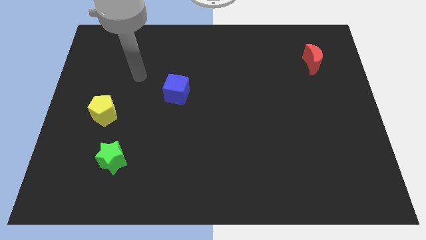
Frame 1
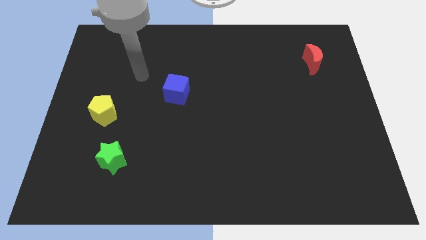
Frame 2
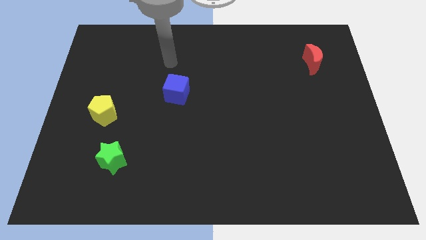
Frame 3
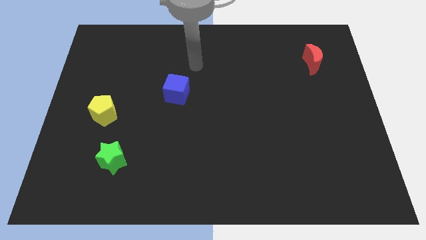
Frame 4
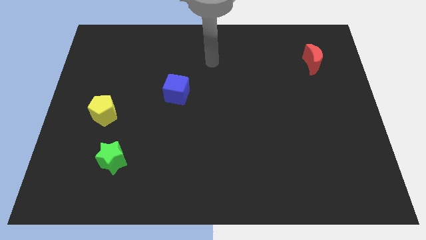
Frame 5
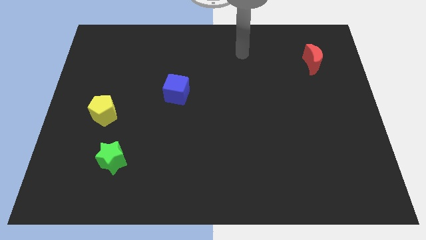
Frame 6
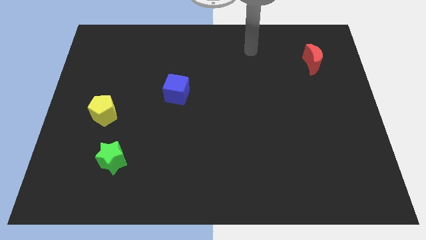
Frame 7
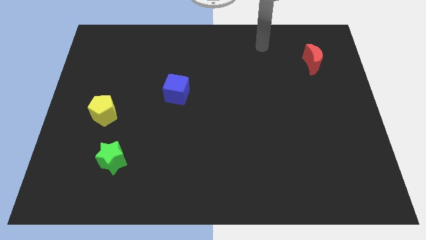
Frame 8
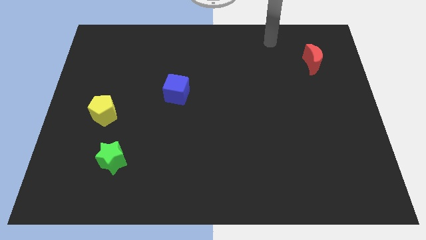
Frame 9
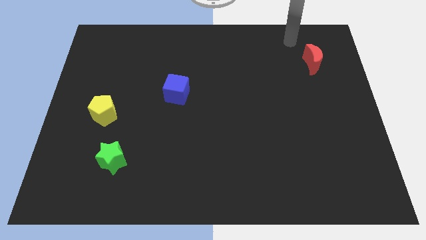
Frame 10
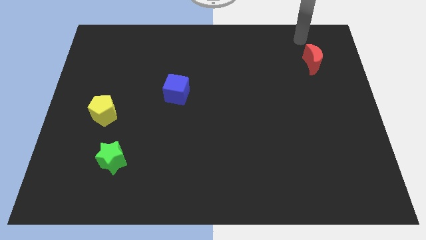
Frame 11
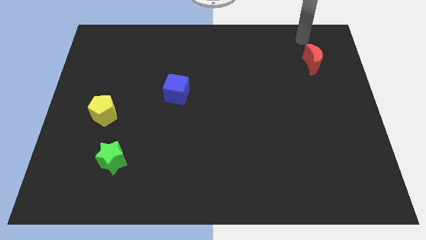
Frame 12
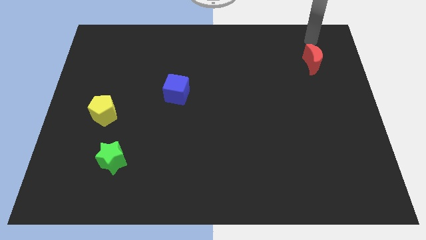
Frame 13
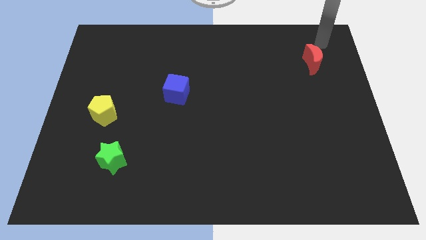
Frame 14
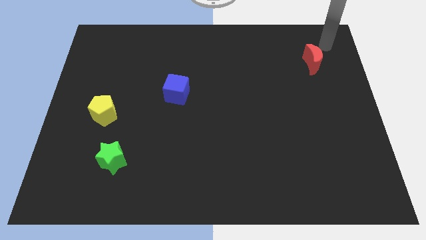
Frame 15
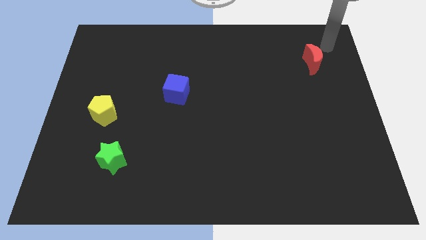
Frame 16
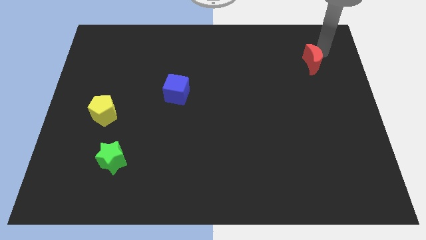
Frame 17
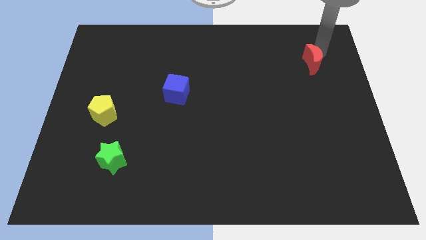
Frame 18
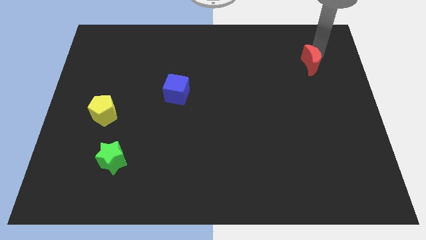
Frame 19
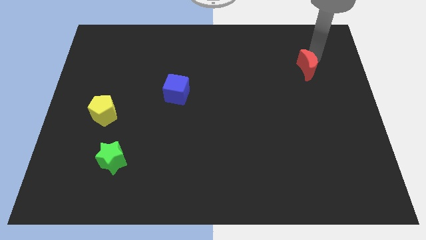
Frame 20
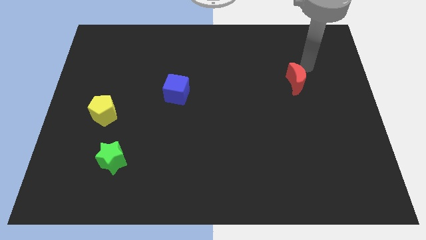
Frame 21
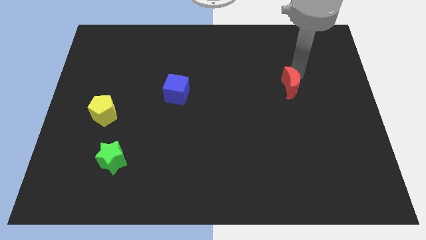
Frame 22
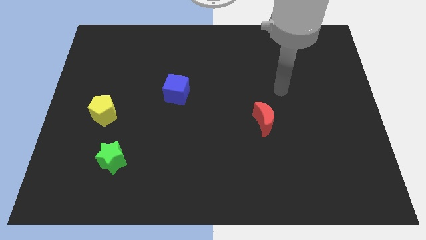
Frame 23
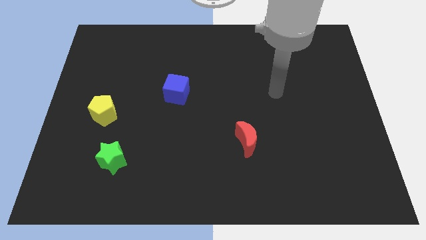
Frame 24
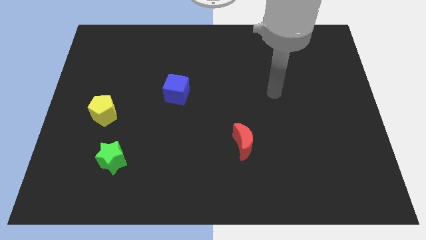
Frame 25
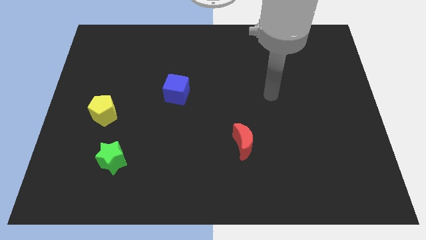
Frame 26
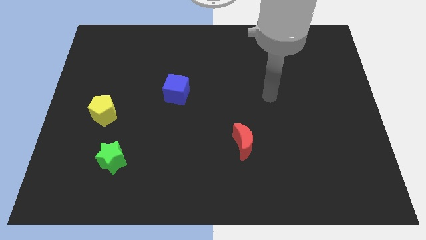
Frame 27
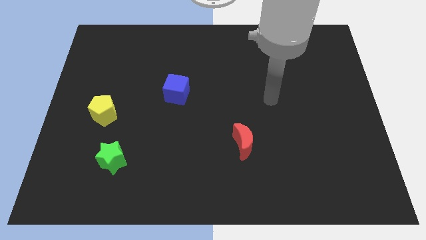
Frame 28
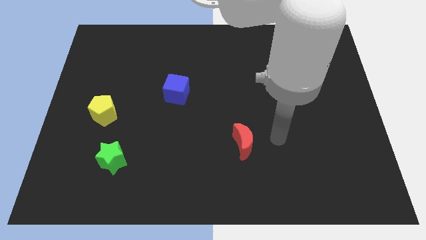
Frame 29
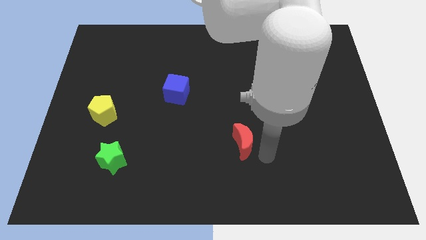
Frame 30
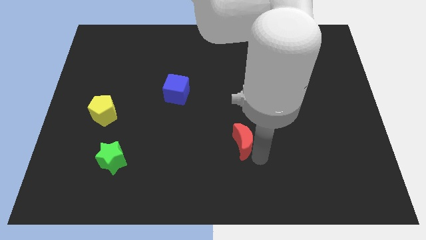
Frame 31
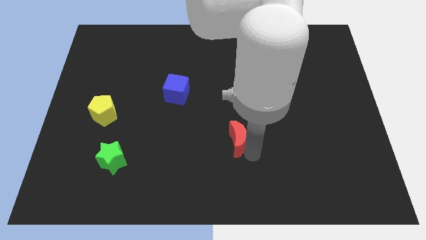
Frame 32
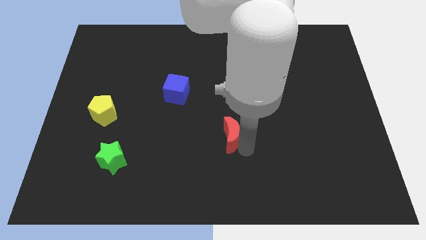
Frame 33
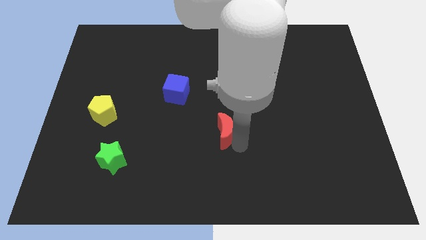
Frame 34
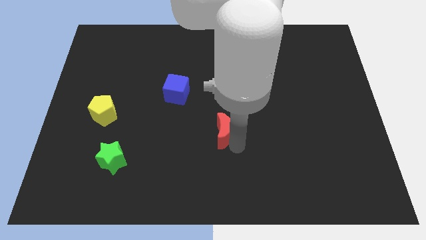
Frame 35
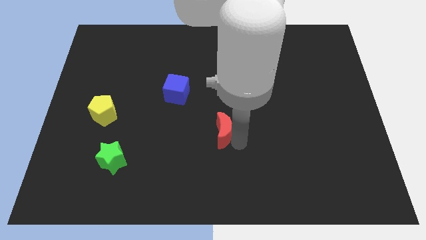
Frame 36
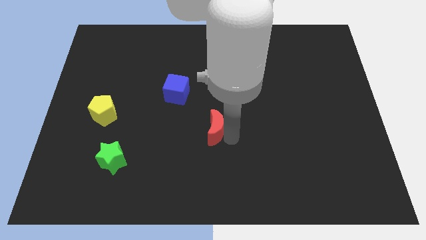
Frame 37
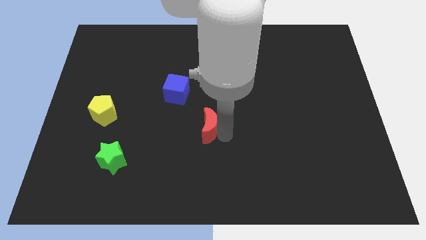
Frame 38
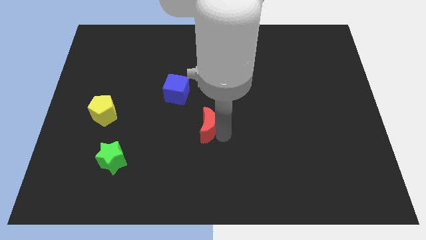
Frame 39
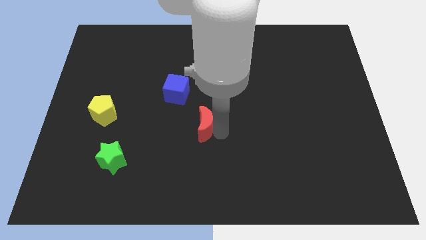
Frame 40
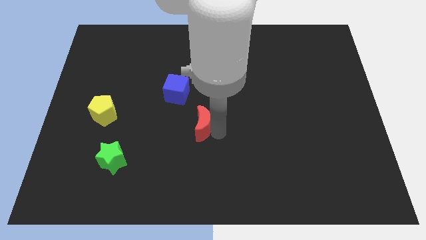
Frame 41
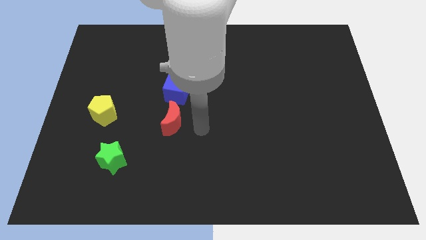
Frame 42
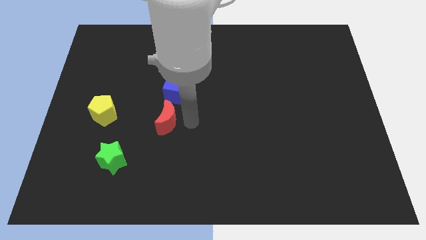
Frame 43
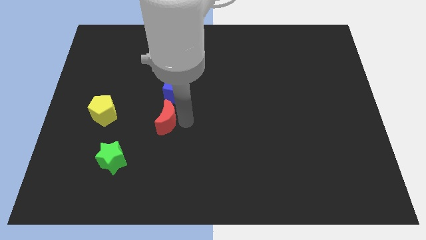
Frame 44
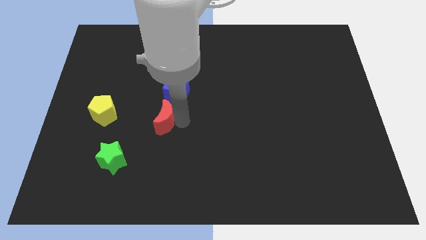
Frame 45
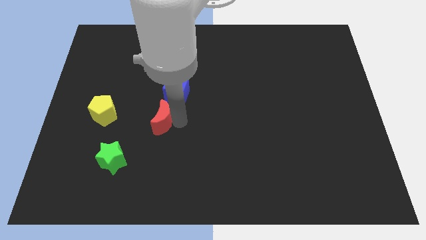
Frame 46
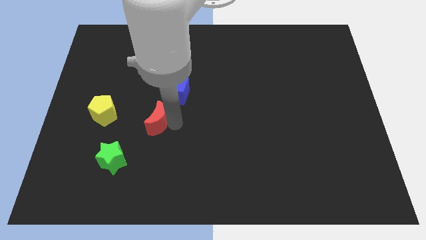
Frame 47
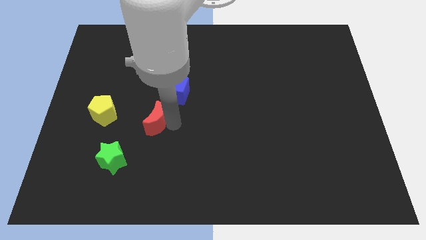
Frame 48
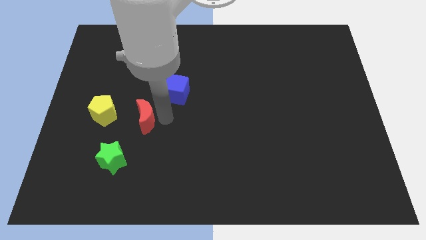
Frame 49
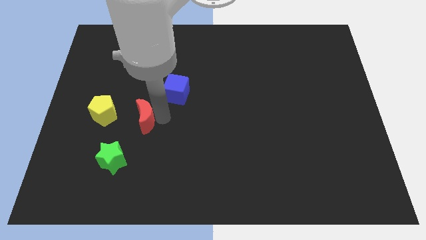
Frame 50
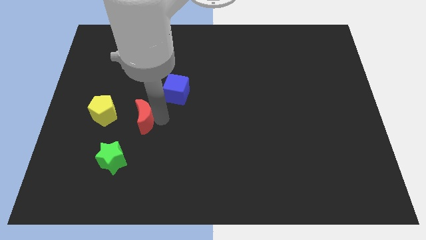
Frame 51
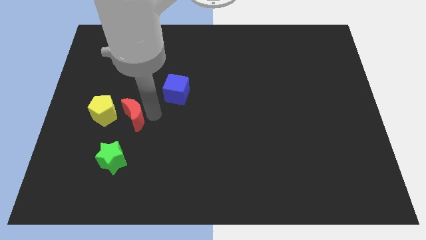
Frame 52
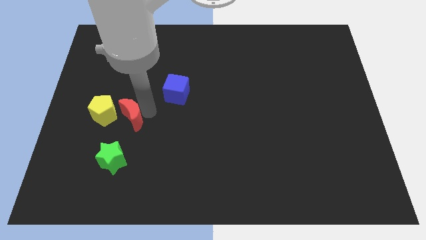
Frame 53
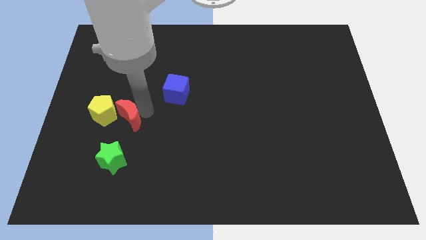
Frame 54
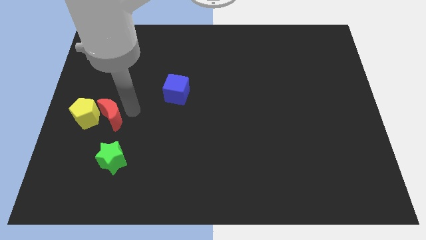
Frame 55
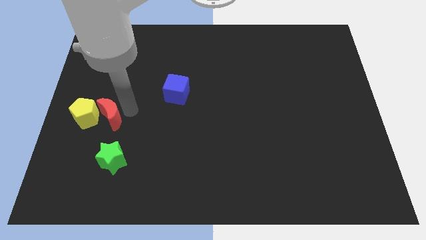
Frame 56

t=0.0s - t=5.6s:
move the moon to the yellow pentagon

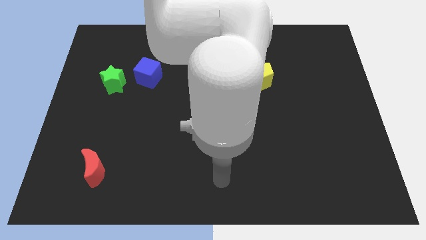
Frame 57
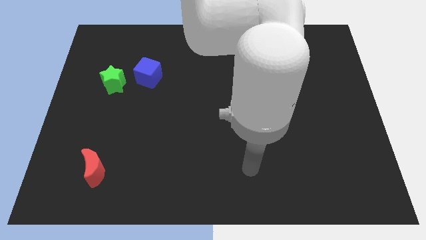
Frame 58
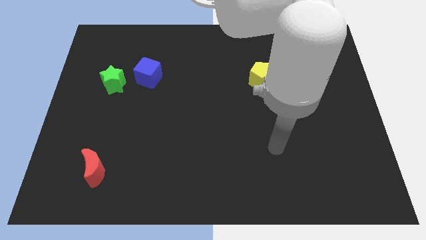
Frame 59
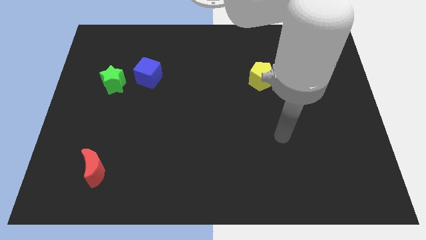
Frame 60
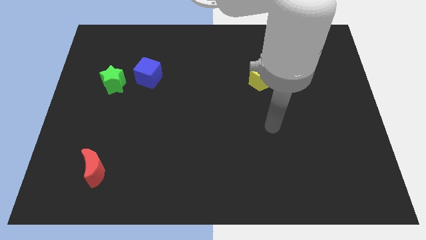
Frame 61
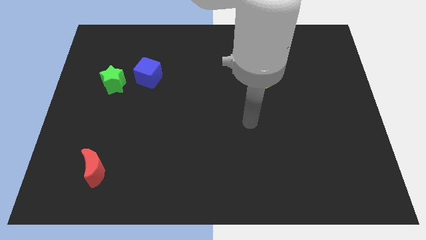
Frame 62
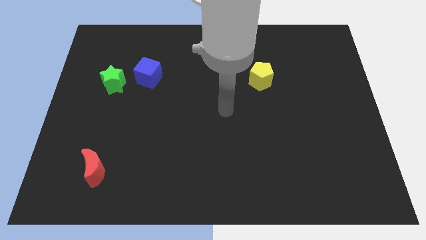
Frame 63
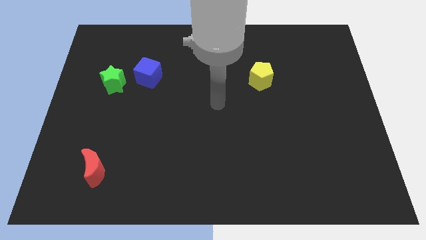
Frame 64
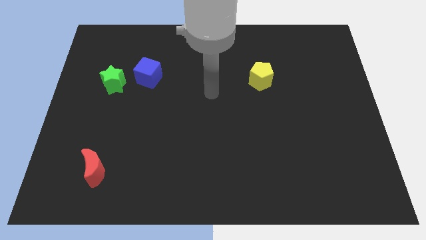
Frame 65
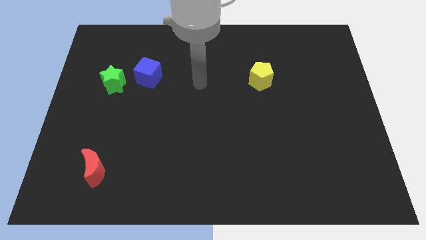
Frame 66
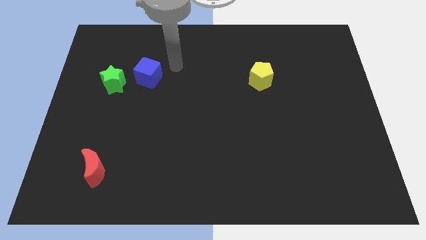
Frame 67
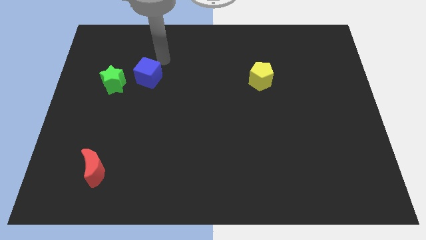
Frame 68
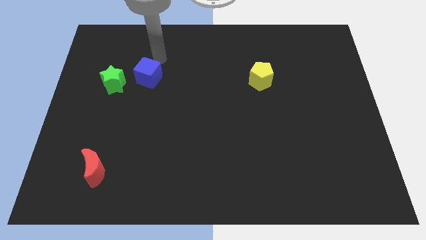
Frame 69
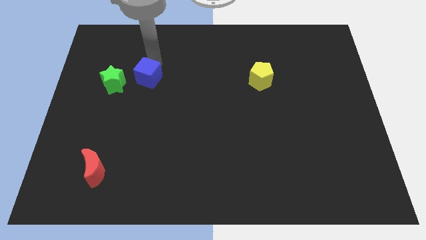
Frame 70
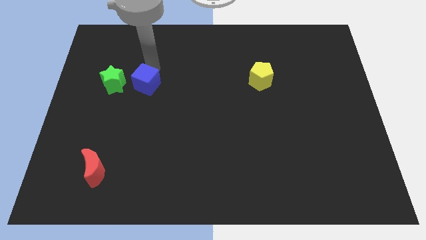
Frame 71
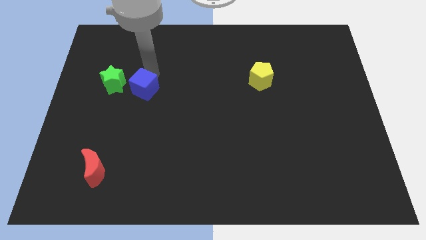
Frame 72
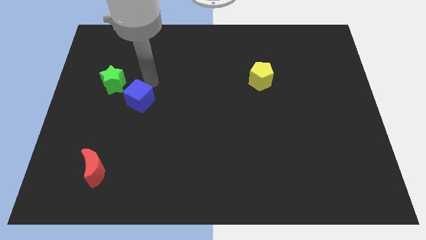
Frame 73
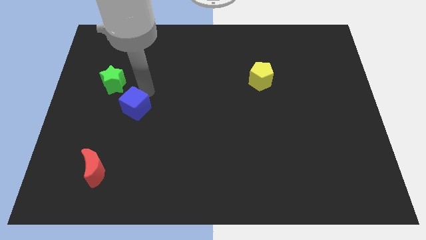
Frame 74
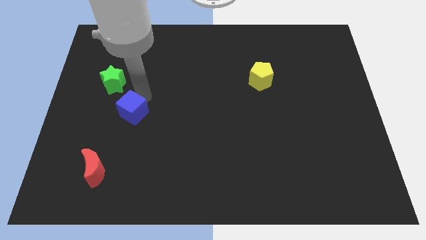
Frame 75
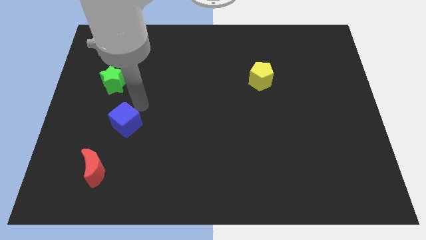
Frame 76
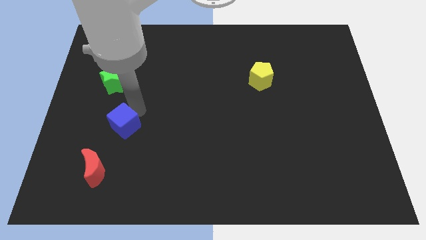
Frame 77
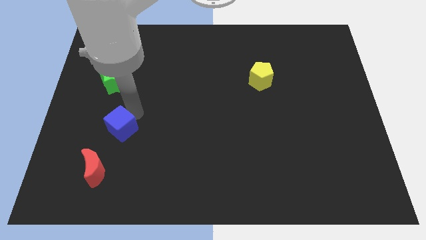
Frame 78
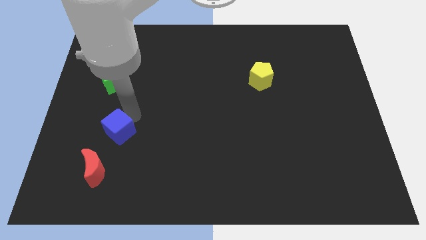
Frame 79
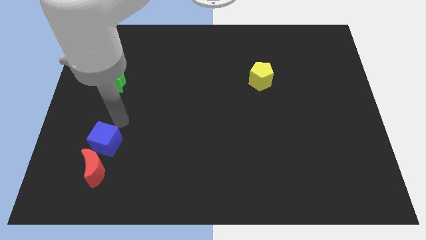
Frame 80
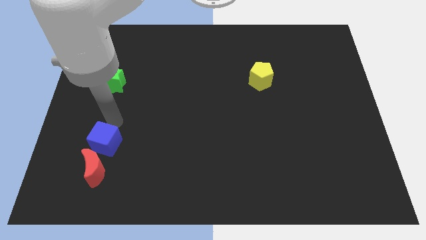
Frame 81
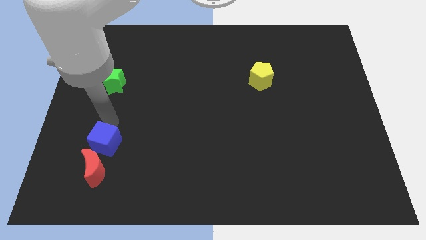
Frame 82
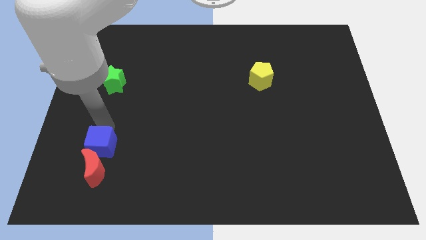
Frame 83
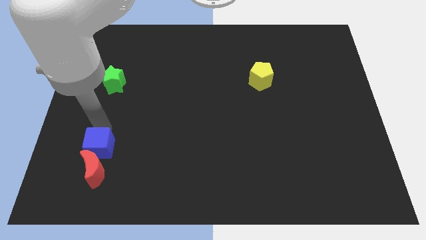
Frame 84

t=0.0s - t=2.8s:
move the cube to the red moon
